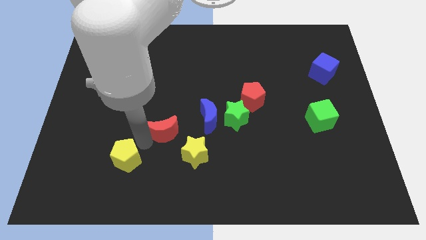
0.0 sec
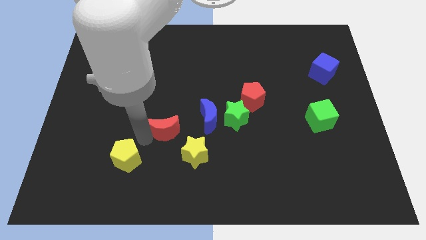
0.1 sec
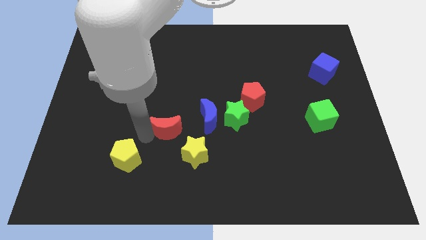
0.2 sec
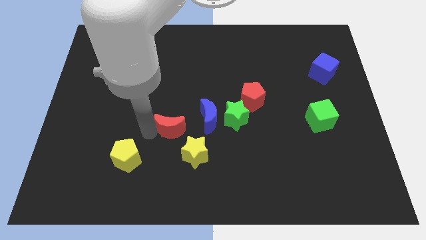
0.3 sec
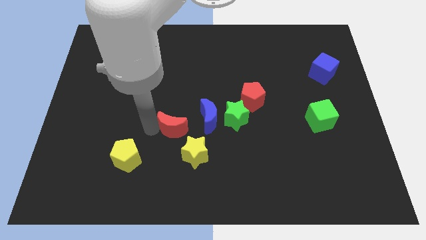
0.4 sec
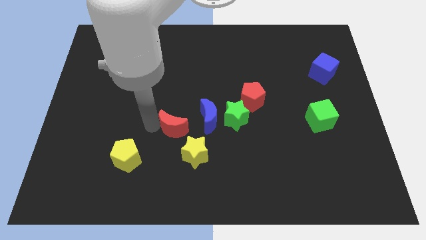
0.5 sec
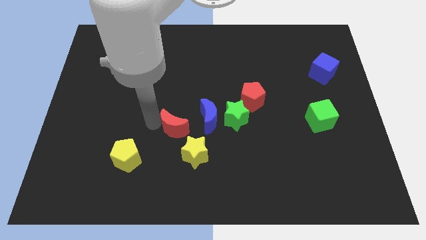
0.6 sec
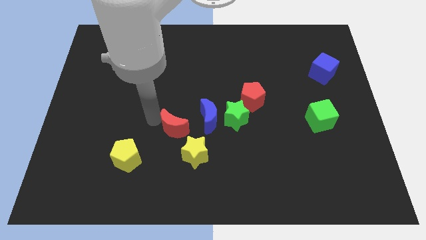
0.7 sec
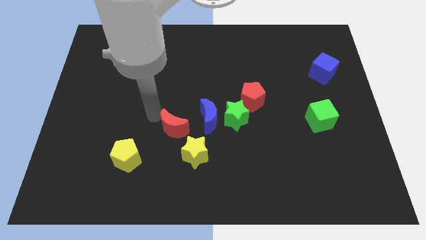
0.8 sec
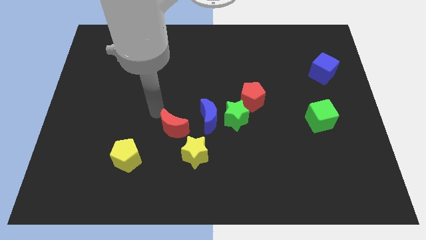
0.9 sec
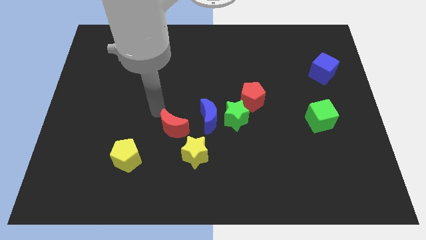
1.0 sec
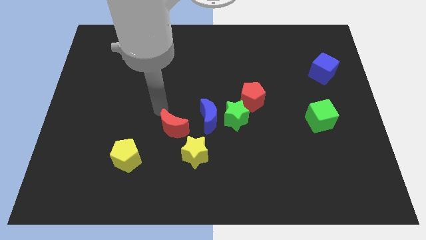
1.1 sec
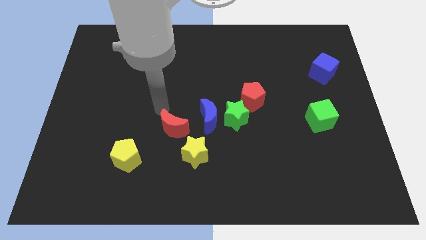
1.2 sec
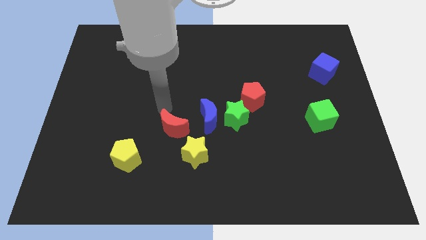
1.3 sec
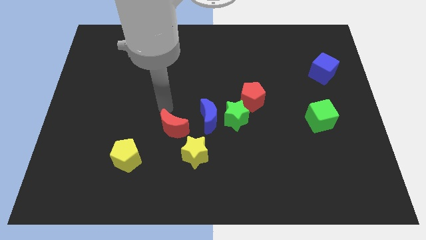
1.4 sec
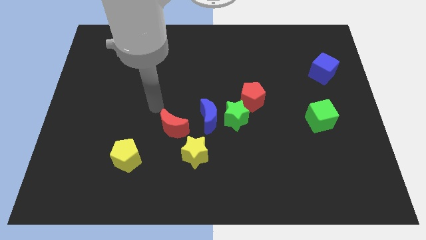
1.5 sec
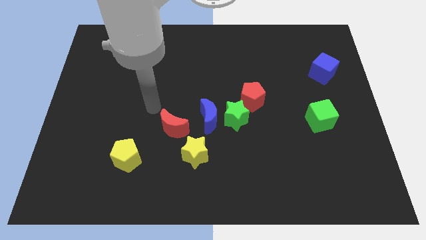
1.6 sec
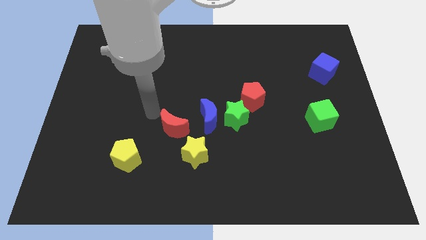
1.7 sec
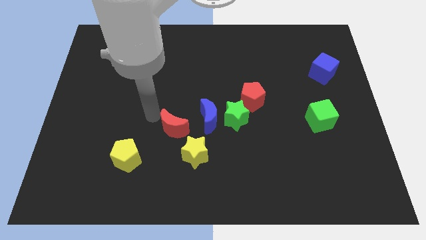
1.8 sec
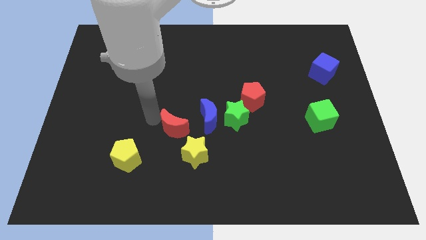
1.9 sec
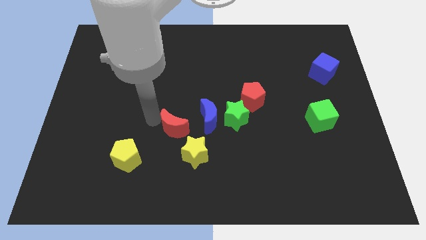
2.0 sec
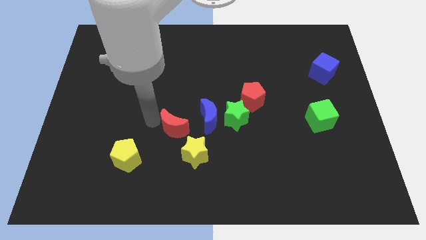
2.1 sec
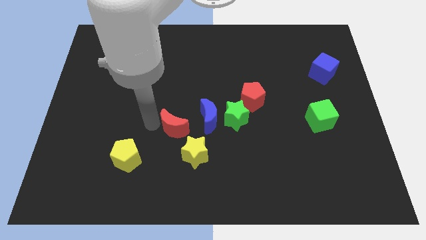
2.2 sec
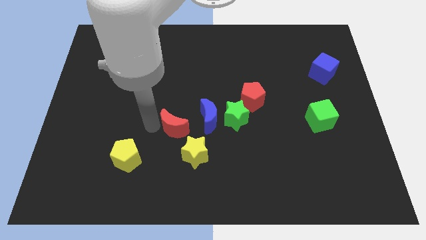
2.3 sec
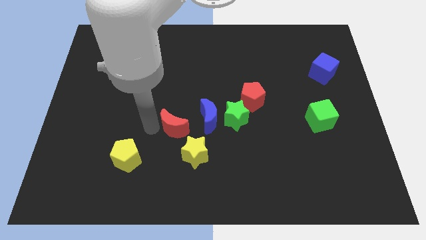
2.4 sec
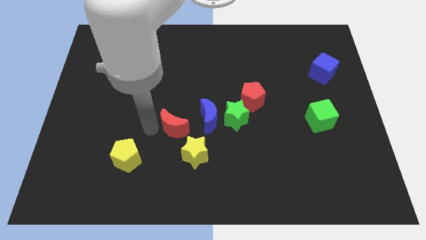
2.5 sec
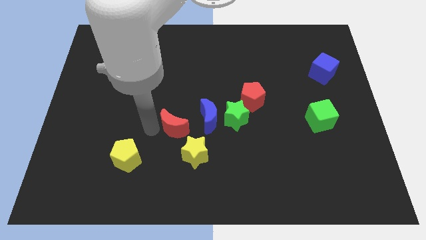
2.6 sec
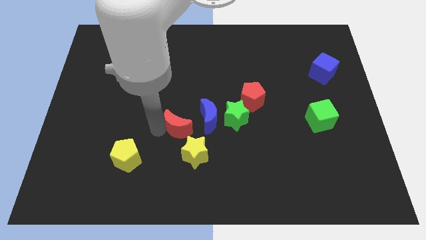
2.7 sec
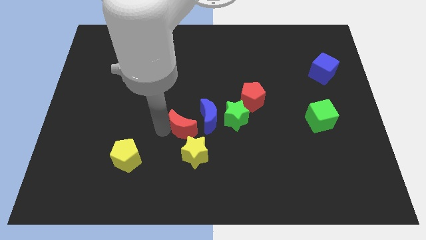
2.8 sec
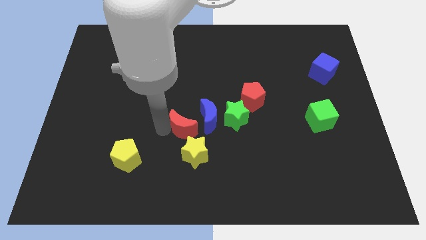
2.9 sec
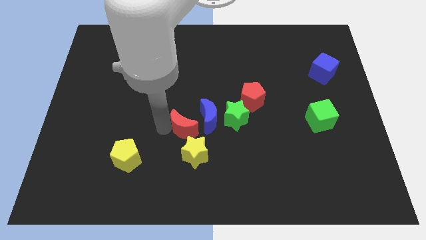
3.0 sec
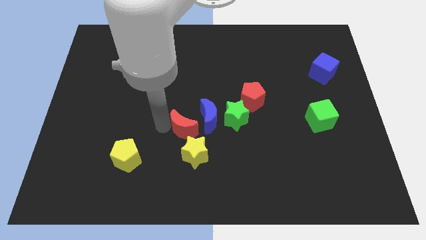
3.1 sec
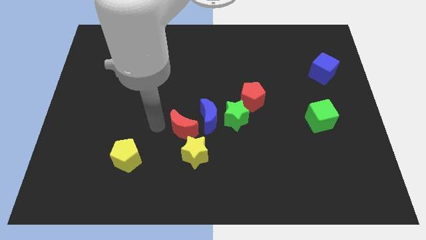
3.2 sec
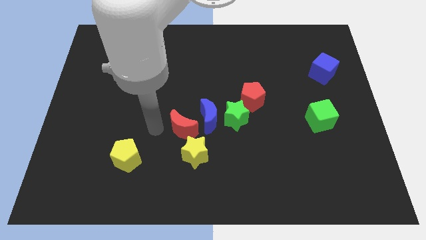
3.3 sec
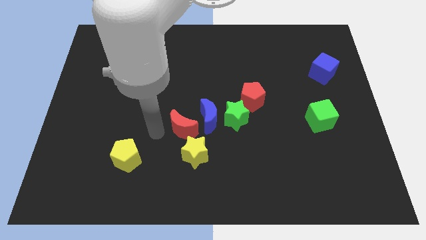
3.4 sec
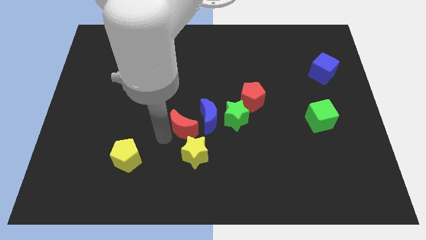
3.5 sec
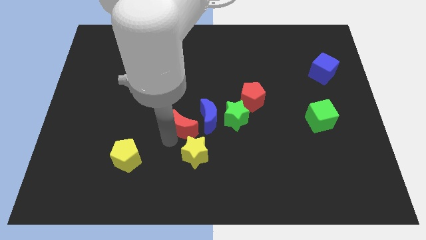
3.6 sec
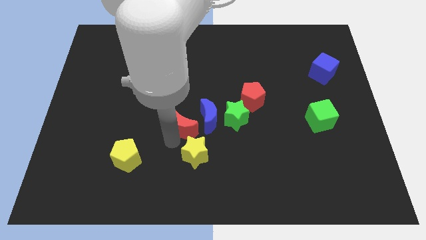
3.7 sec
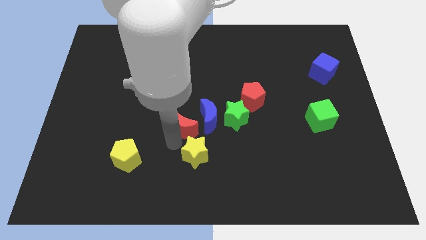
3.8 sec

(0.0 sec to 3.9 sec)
slightly move the red crescent towards blue crescent

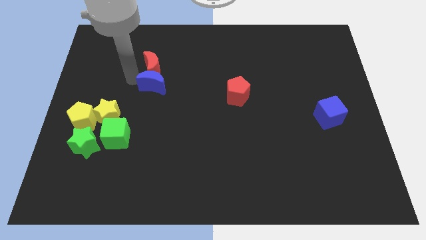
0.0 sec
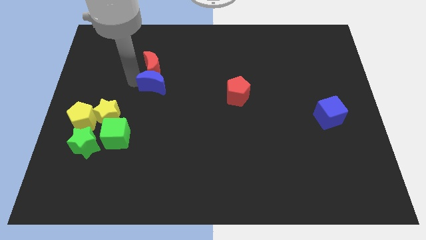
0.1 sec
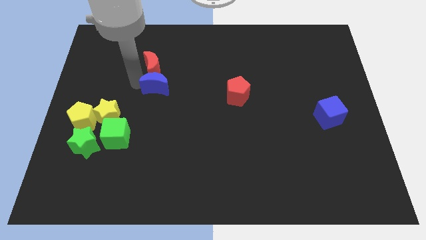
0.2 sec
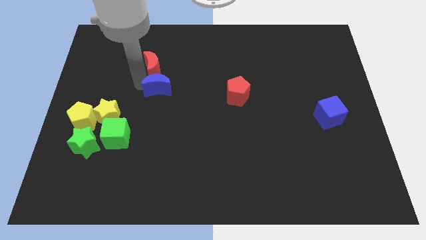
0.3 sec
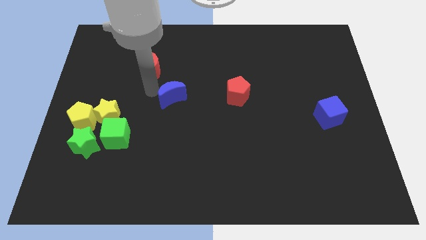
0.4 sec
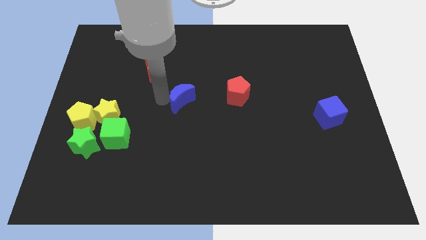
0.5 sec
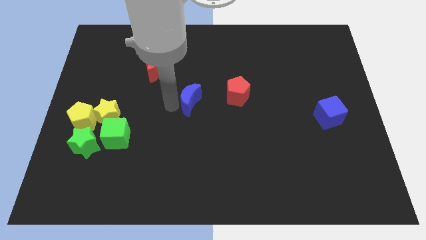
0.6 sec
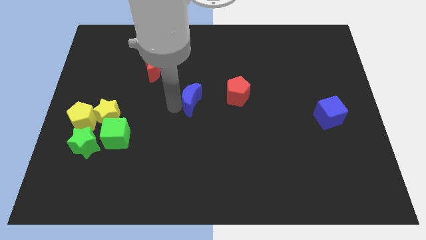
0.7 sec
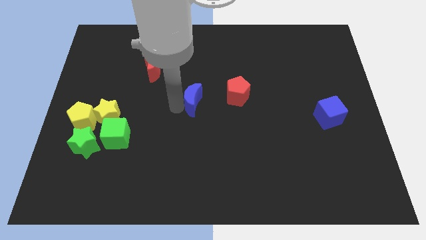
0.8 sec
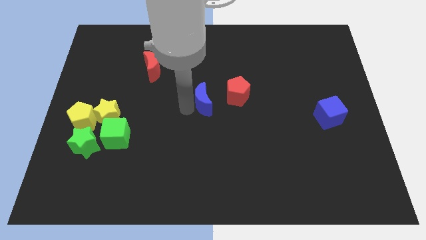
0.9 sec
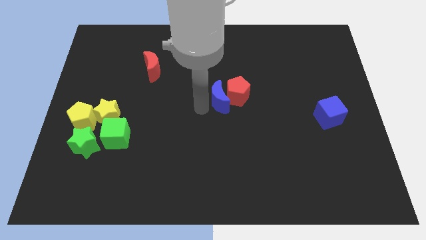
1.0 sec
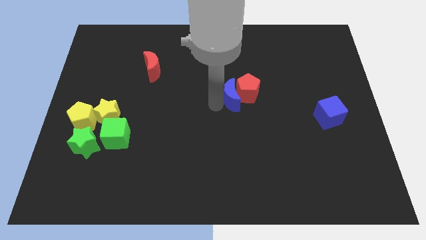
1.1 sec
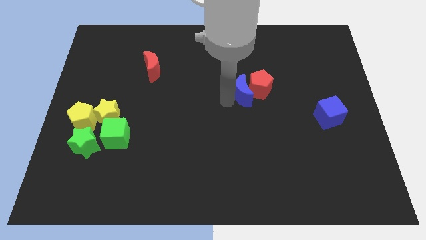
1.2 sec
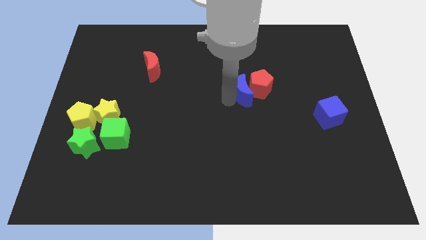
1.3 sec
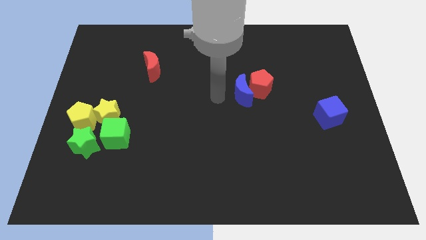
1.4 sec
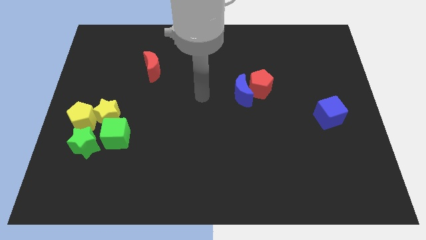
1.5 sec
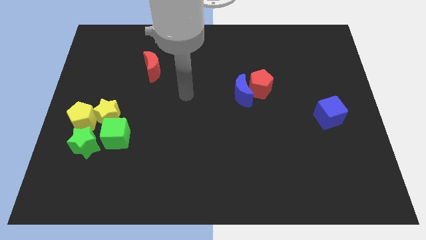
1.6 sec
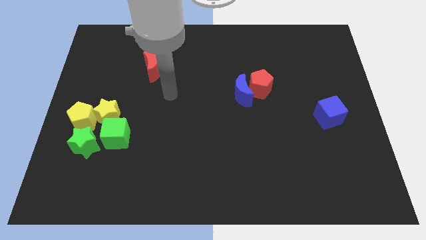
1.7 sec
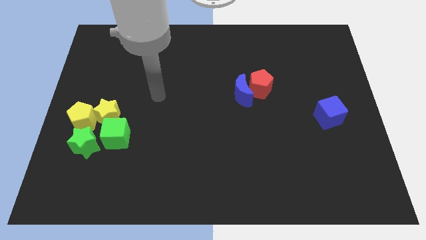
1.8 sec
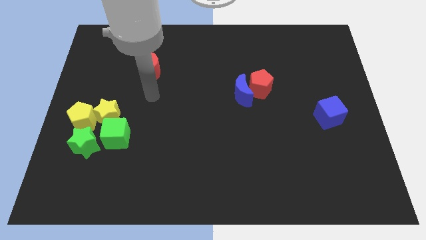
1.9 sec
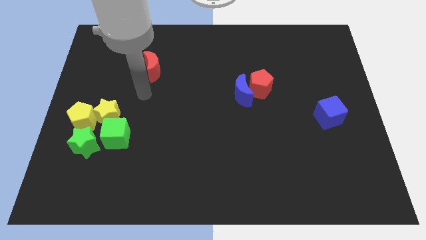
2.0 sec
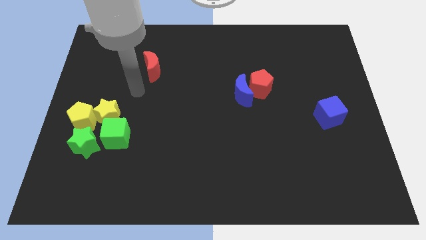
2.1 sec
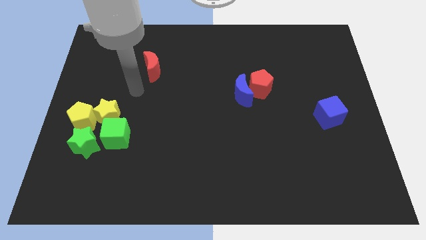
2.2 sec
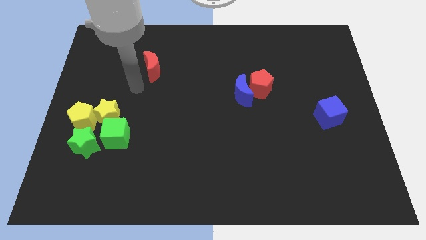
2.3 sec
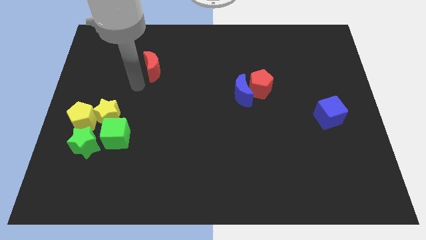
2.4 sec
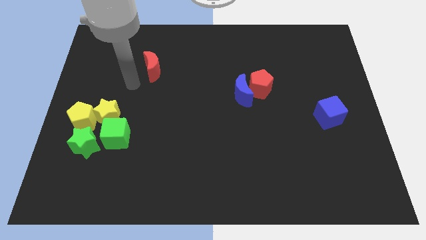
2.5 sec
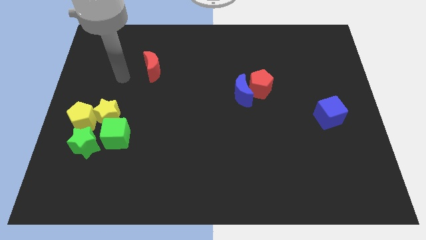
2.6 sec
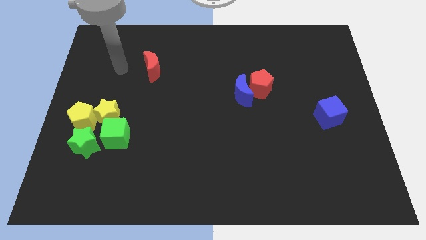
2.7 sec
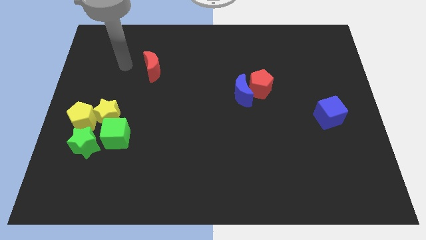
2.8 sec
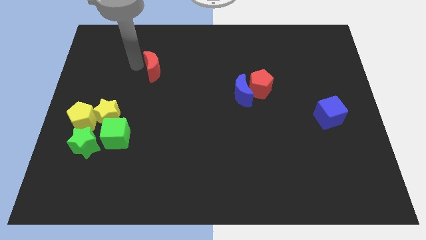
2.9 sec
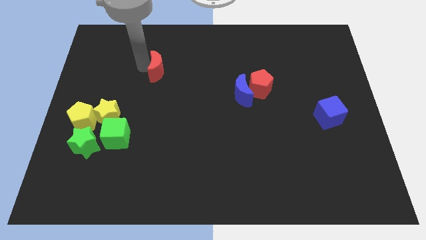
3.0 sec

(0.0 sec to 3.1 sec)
push the blue moon into the red pentagon

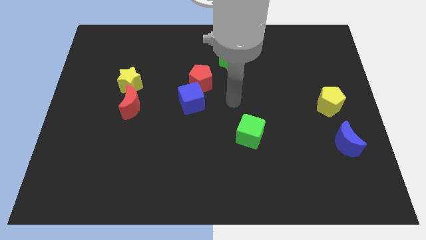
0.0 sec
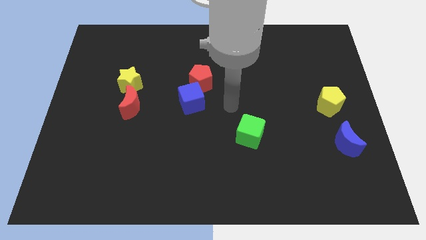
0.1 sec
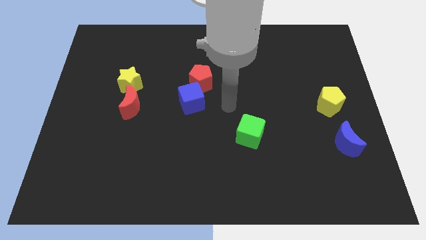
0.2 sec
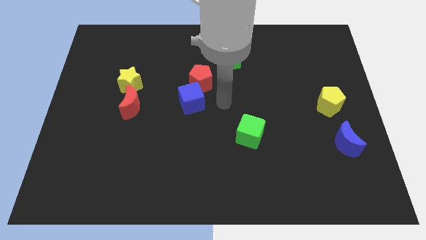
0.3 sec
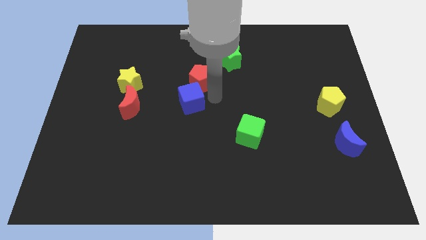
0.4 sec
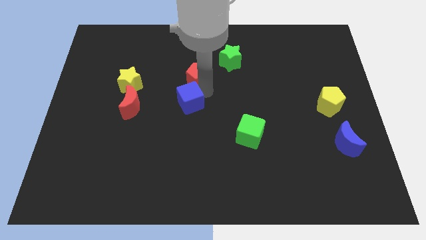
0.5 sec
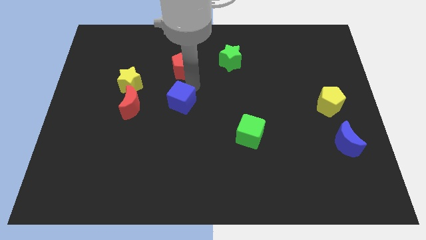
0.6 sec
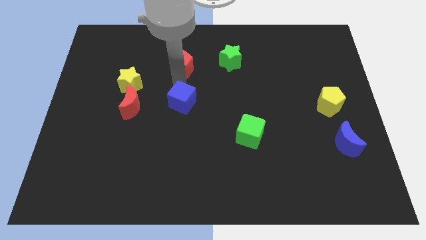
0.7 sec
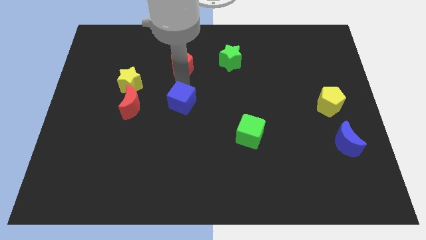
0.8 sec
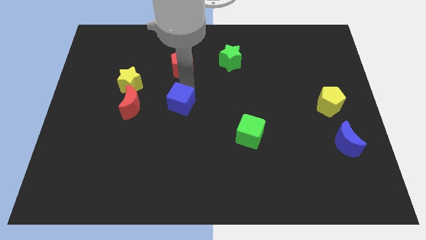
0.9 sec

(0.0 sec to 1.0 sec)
separate the red pentagon and blue cube from each other

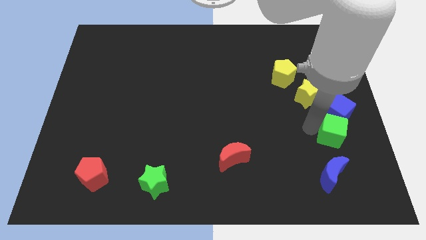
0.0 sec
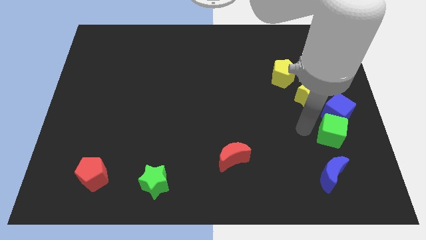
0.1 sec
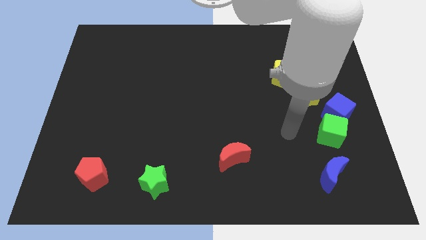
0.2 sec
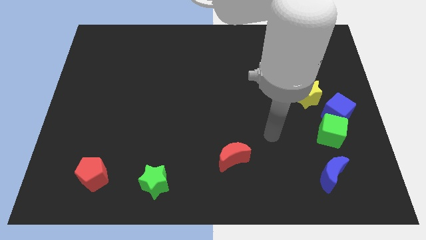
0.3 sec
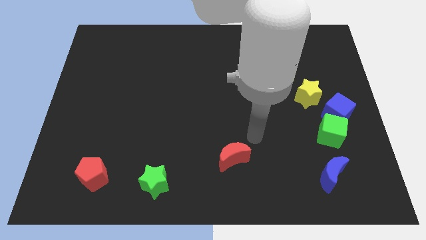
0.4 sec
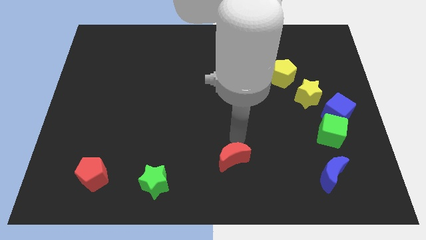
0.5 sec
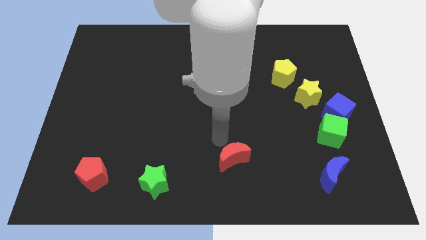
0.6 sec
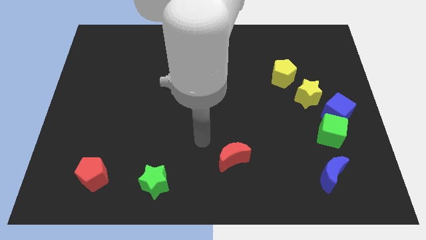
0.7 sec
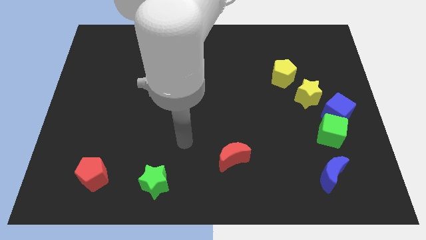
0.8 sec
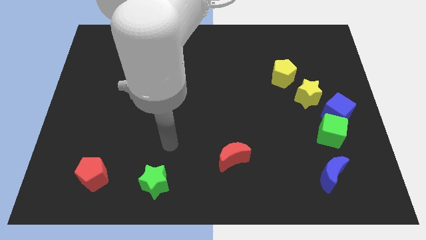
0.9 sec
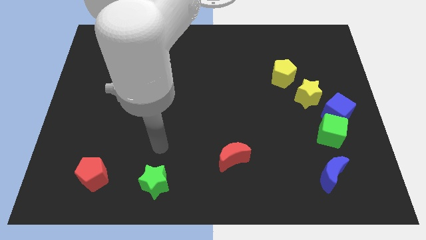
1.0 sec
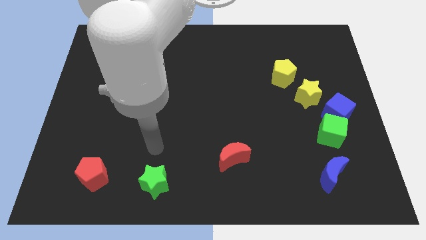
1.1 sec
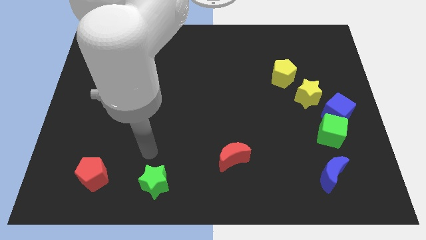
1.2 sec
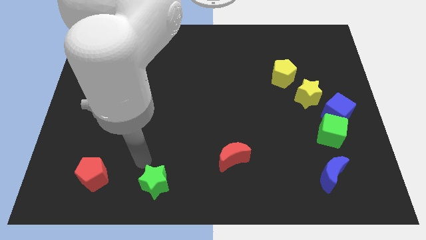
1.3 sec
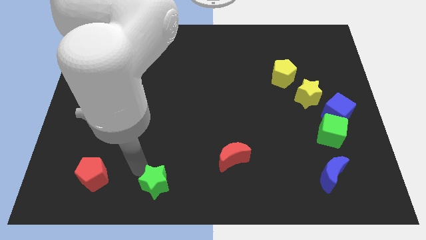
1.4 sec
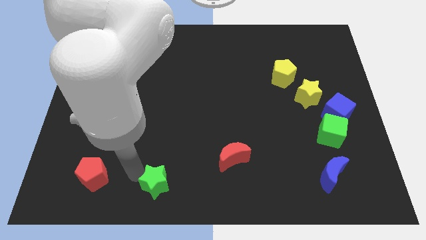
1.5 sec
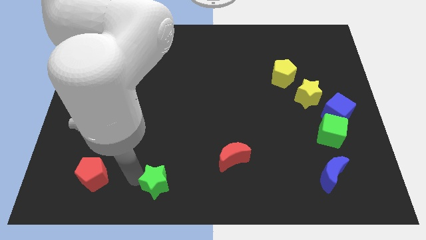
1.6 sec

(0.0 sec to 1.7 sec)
touch the top left of the green star
